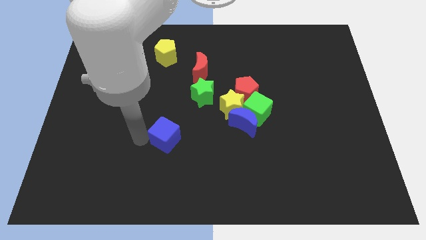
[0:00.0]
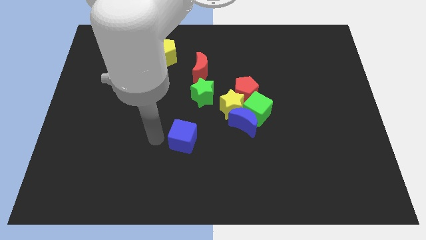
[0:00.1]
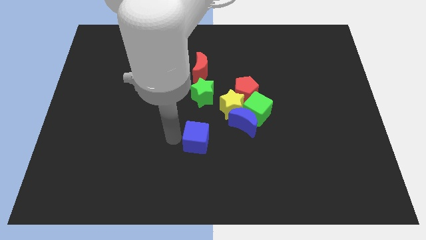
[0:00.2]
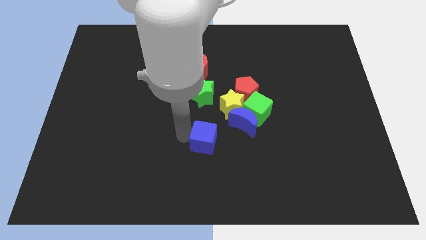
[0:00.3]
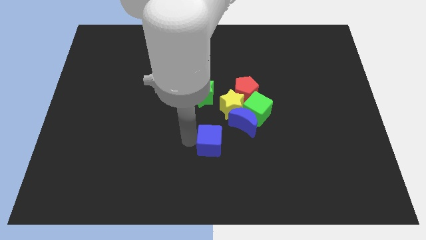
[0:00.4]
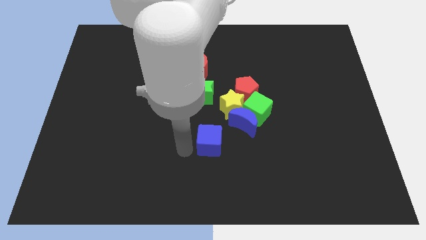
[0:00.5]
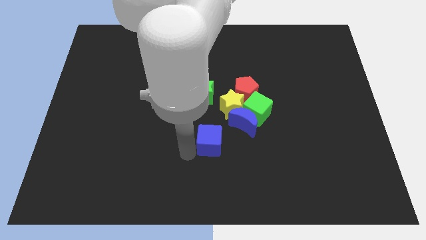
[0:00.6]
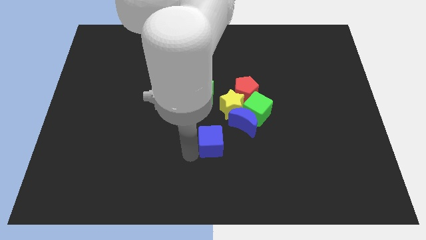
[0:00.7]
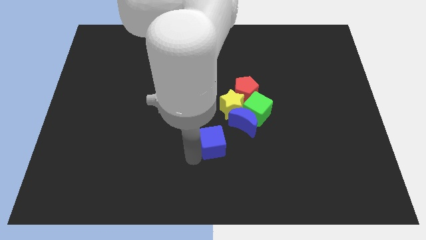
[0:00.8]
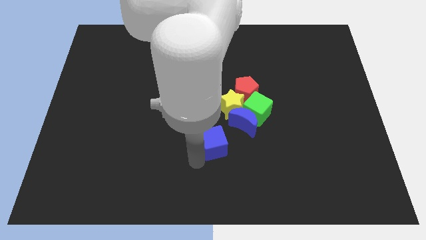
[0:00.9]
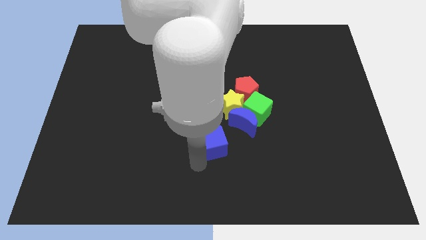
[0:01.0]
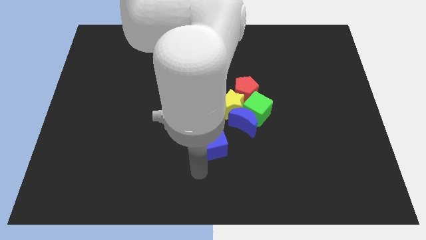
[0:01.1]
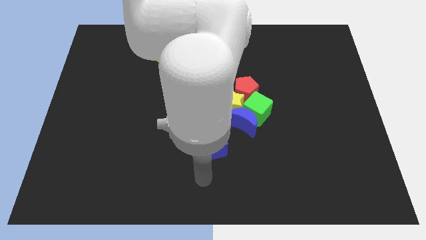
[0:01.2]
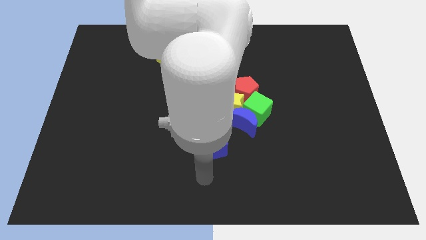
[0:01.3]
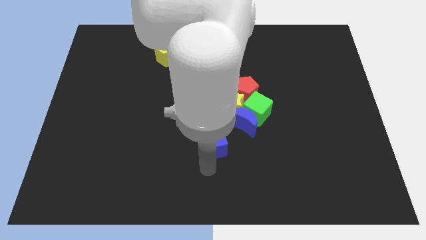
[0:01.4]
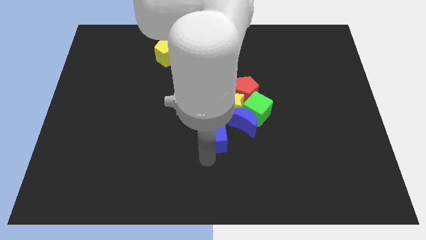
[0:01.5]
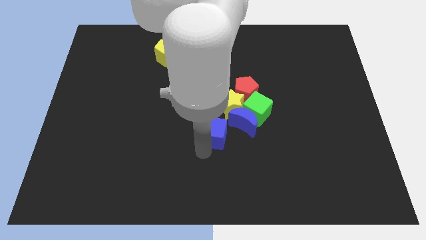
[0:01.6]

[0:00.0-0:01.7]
place the blue cube close to the blue moon

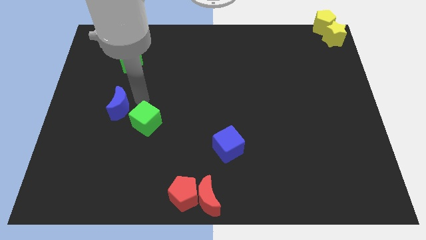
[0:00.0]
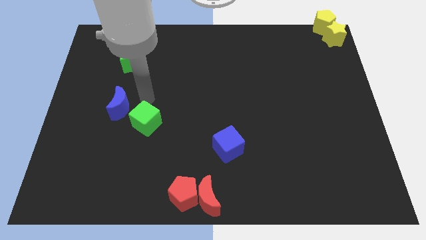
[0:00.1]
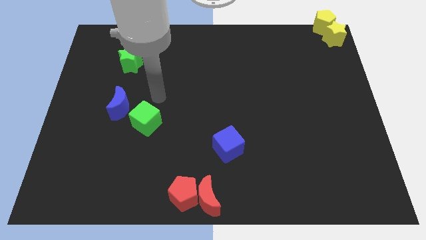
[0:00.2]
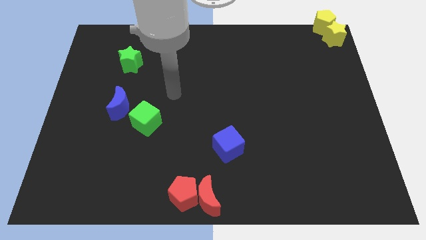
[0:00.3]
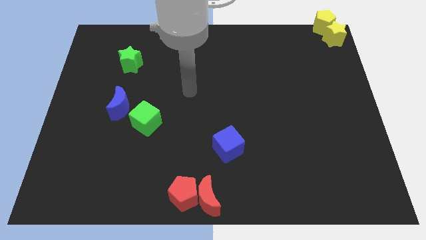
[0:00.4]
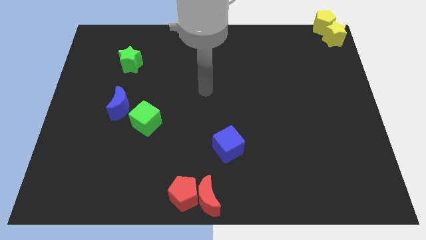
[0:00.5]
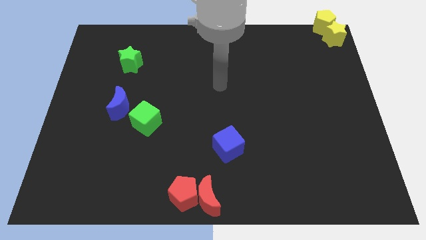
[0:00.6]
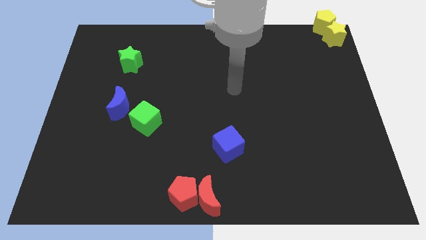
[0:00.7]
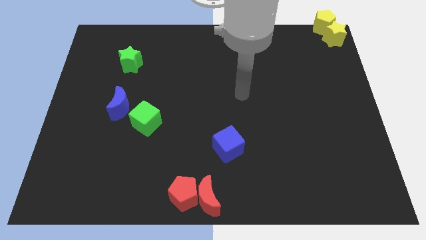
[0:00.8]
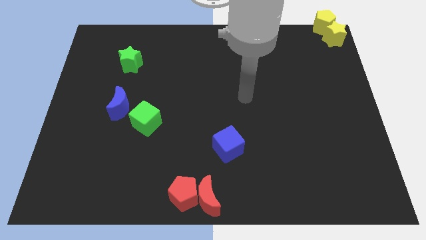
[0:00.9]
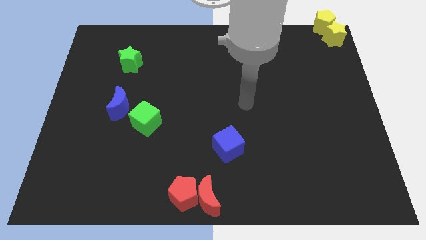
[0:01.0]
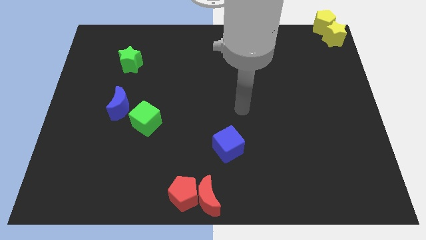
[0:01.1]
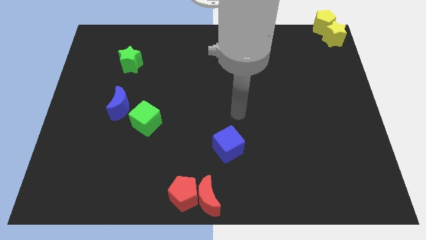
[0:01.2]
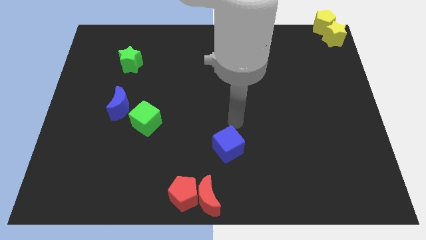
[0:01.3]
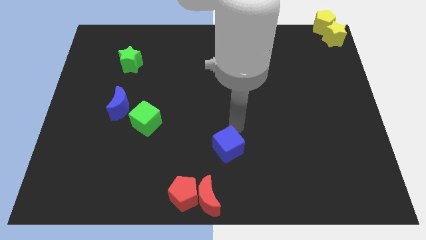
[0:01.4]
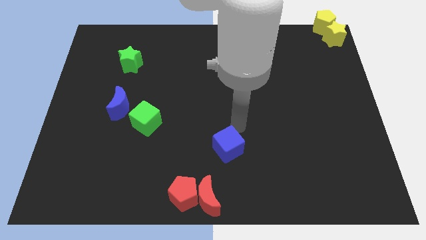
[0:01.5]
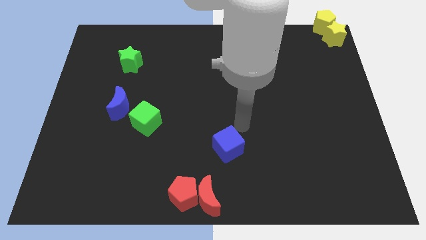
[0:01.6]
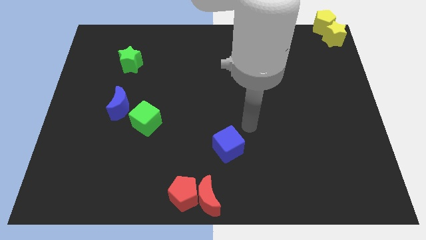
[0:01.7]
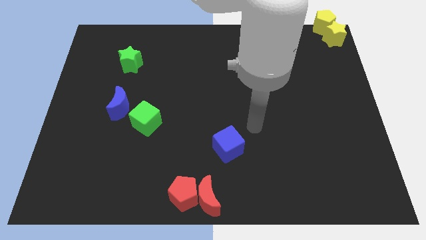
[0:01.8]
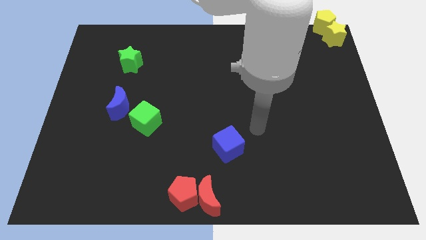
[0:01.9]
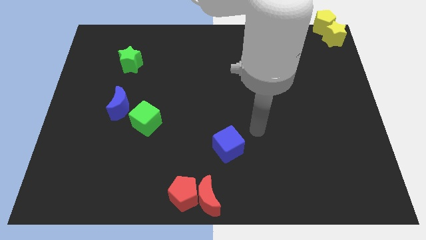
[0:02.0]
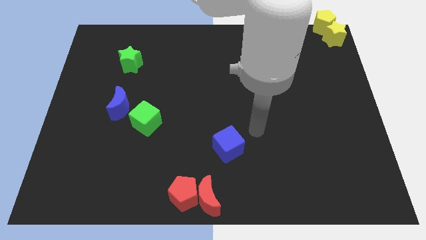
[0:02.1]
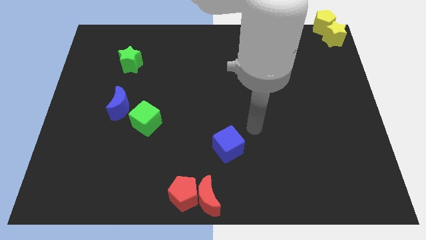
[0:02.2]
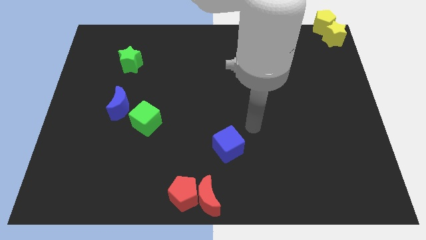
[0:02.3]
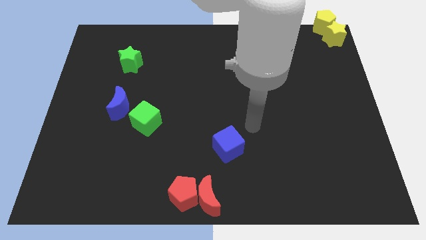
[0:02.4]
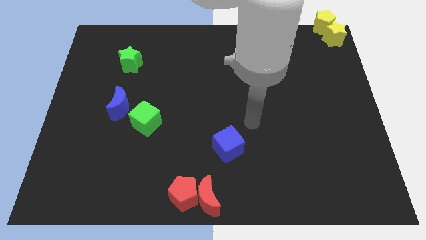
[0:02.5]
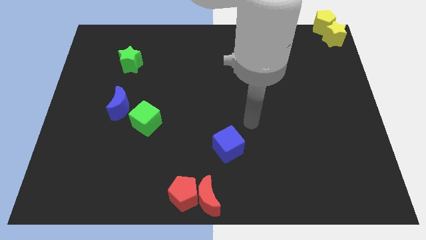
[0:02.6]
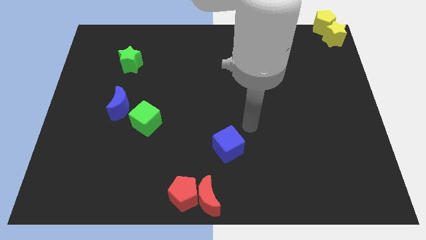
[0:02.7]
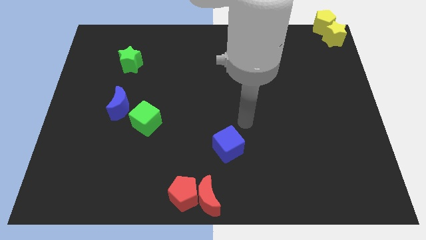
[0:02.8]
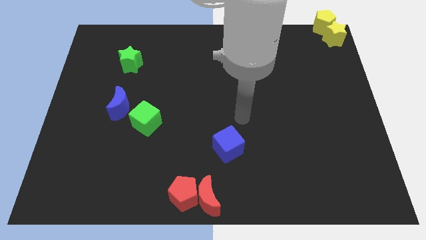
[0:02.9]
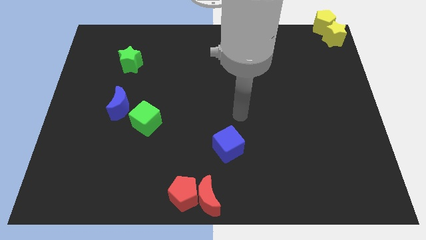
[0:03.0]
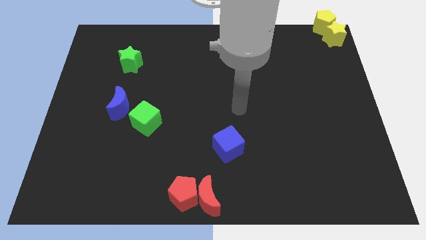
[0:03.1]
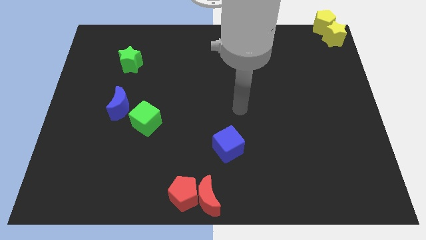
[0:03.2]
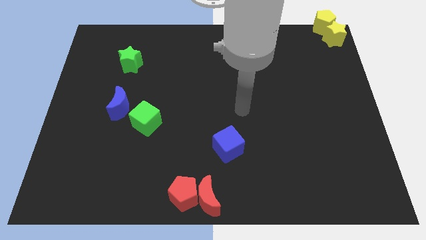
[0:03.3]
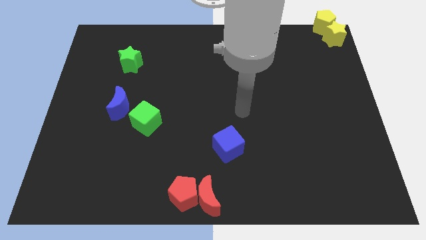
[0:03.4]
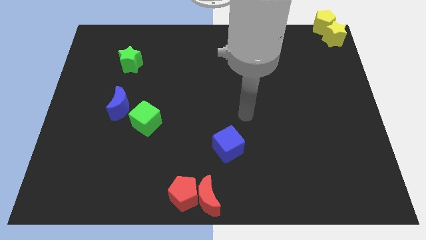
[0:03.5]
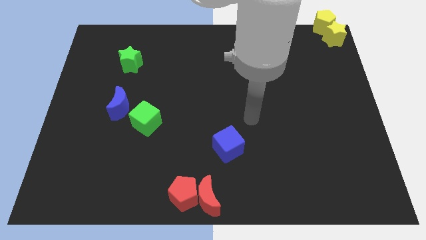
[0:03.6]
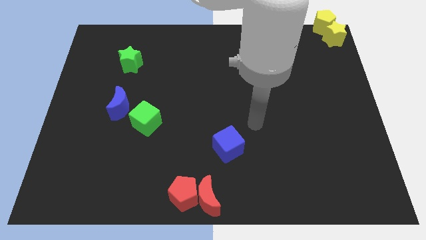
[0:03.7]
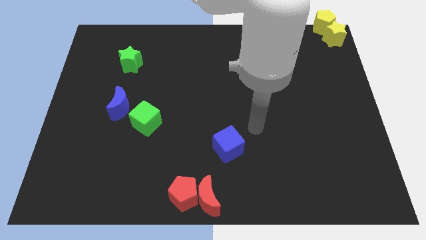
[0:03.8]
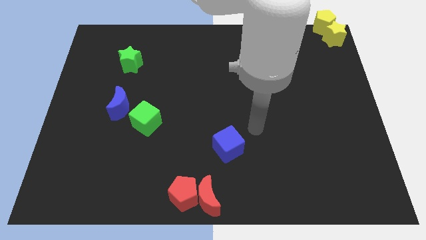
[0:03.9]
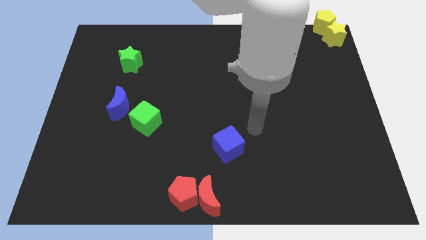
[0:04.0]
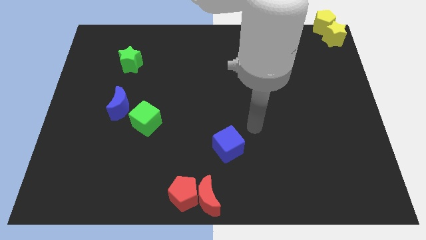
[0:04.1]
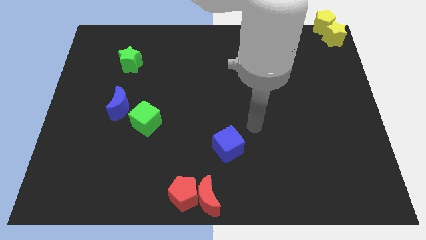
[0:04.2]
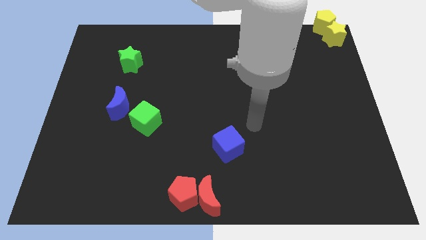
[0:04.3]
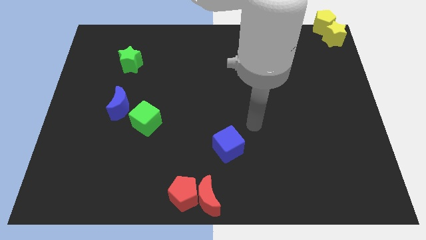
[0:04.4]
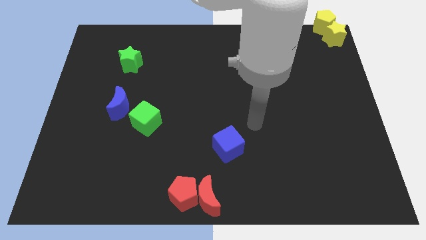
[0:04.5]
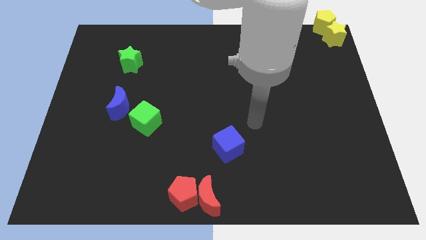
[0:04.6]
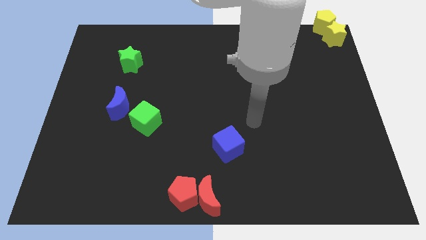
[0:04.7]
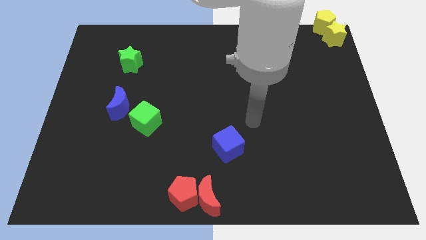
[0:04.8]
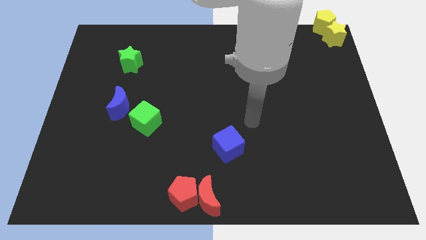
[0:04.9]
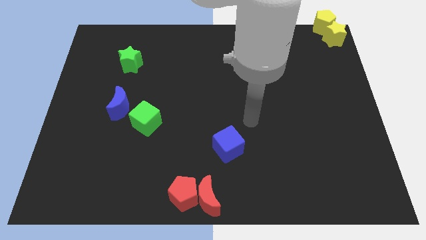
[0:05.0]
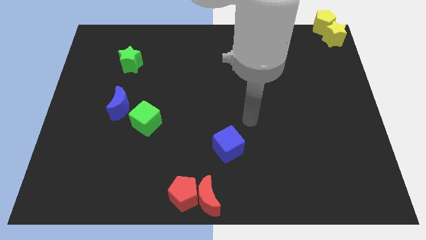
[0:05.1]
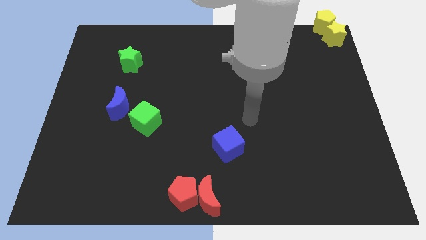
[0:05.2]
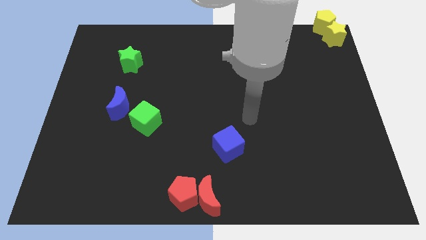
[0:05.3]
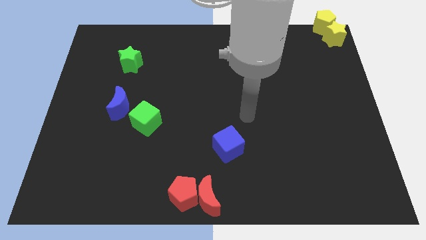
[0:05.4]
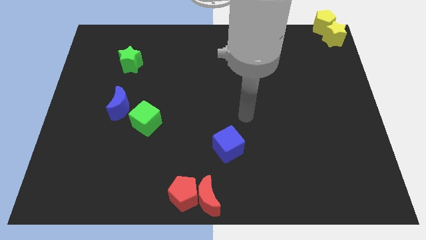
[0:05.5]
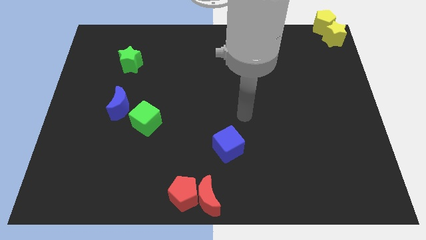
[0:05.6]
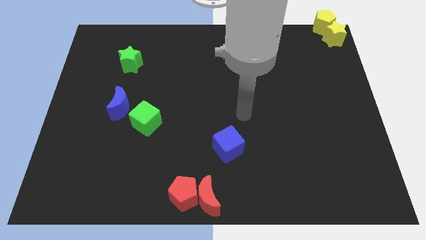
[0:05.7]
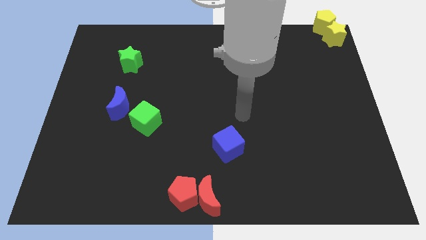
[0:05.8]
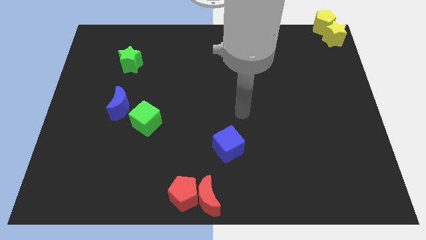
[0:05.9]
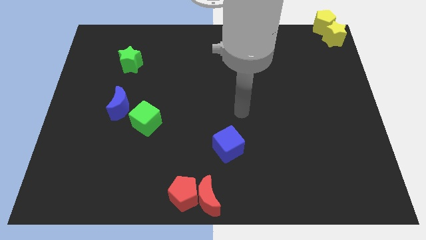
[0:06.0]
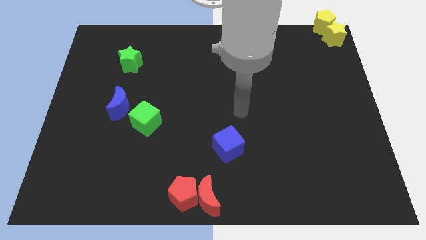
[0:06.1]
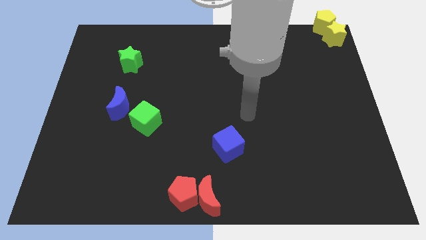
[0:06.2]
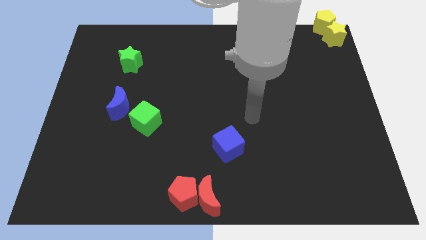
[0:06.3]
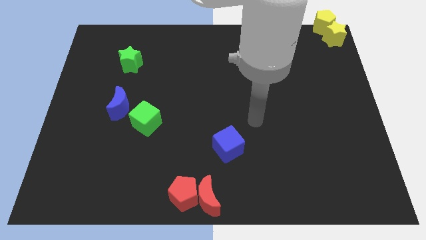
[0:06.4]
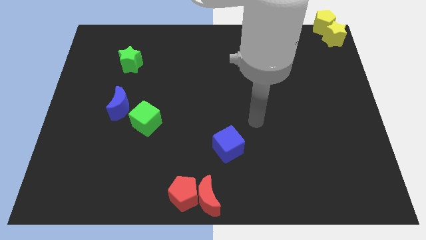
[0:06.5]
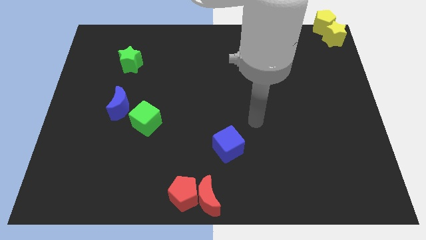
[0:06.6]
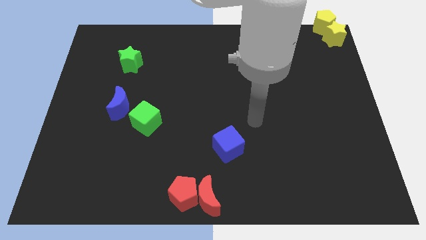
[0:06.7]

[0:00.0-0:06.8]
move yourself to the right side of the blue cube

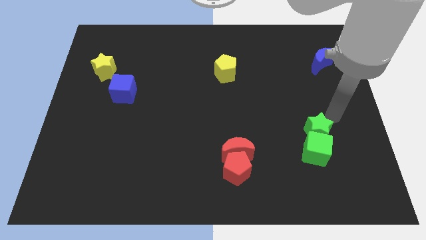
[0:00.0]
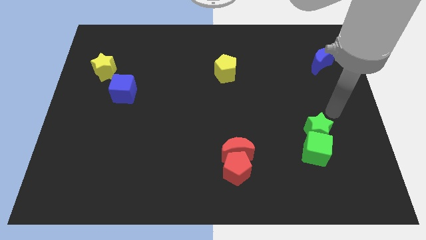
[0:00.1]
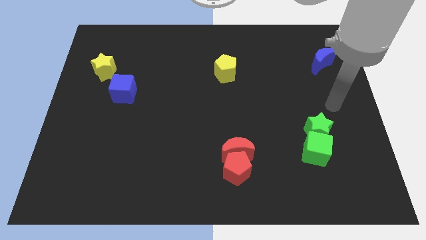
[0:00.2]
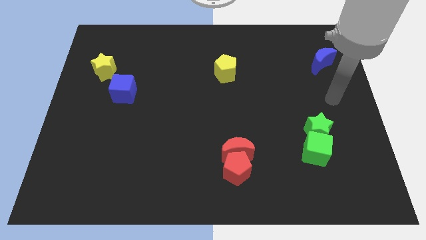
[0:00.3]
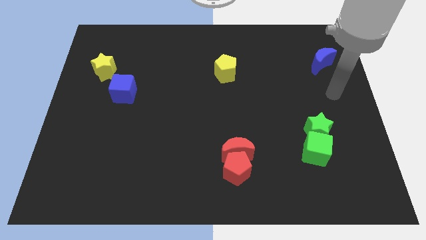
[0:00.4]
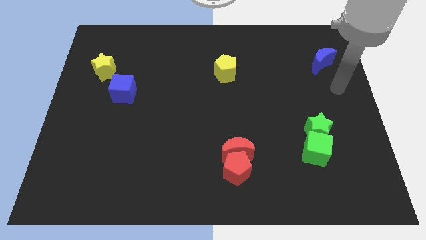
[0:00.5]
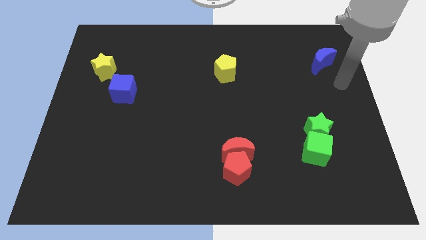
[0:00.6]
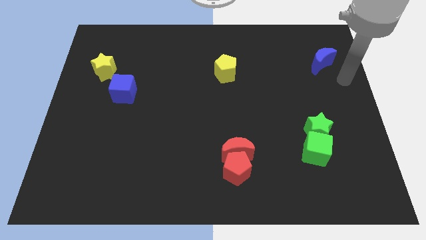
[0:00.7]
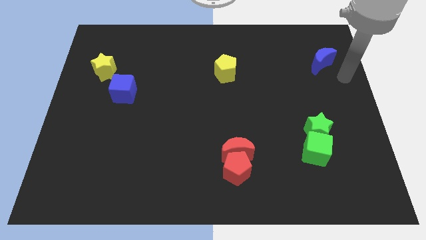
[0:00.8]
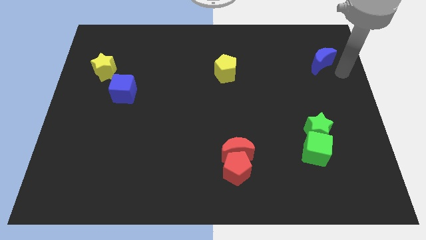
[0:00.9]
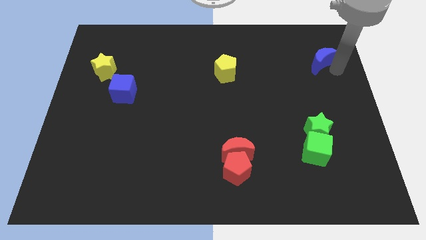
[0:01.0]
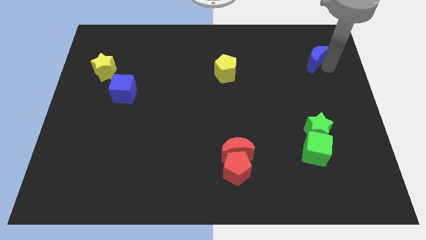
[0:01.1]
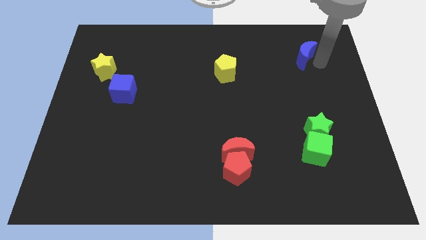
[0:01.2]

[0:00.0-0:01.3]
move arm near blue crescent
